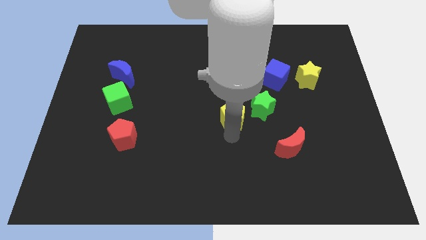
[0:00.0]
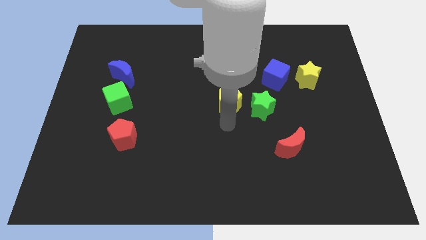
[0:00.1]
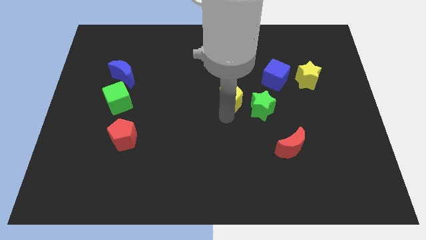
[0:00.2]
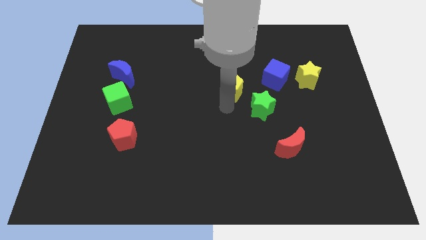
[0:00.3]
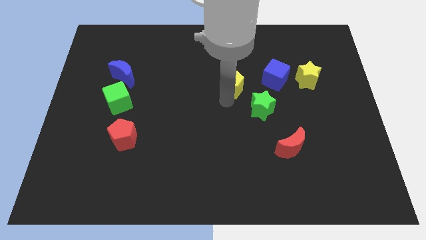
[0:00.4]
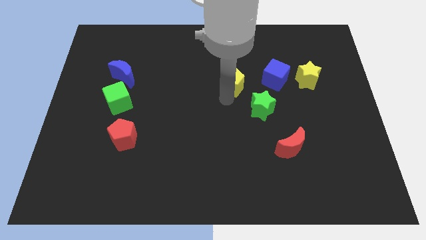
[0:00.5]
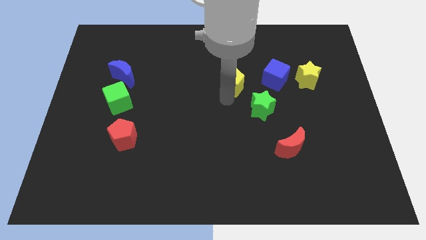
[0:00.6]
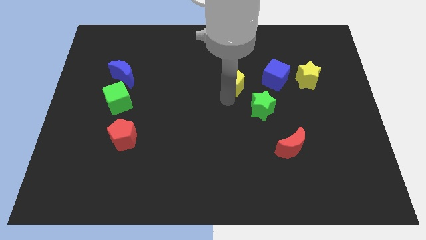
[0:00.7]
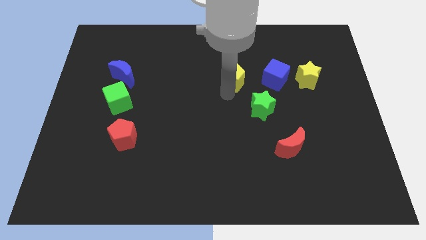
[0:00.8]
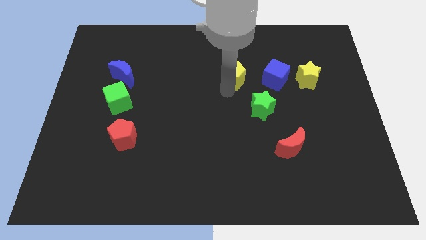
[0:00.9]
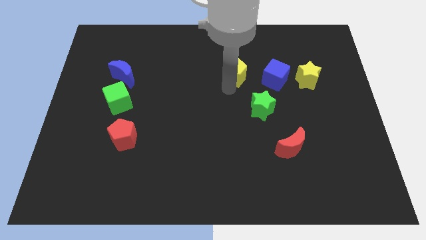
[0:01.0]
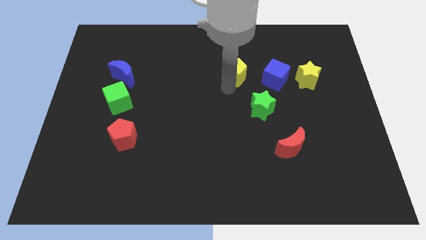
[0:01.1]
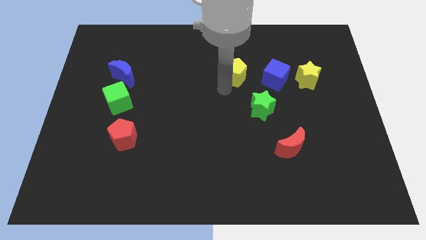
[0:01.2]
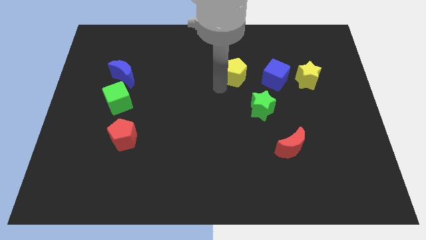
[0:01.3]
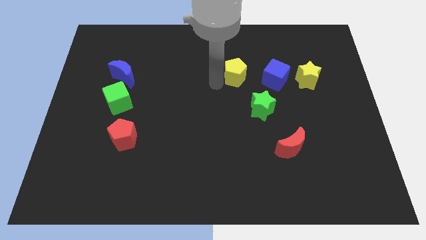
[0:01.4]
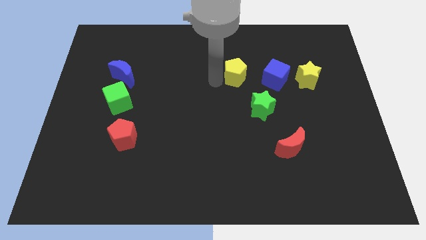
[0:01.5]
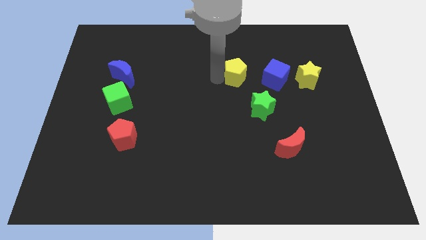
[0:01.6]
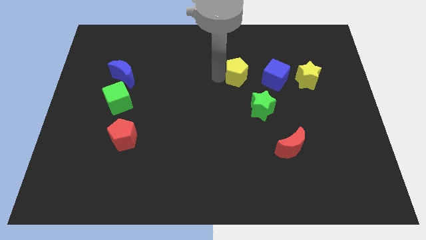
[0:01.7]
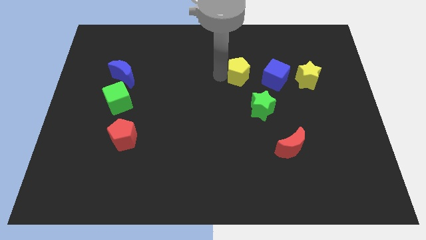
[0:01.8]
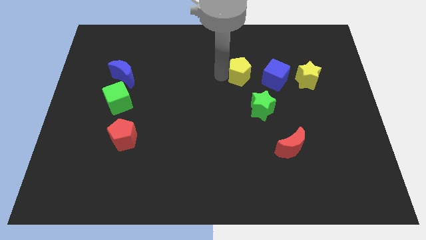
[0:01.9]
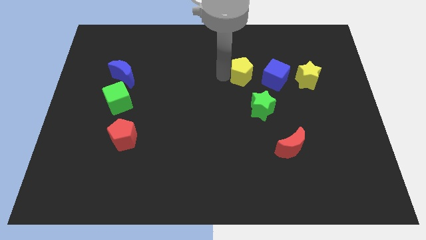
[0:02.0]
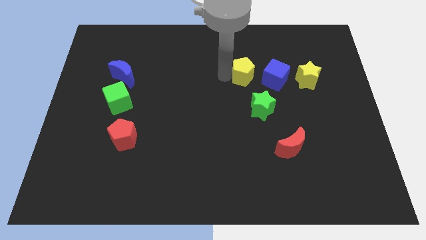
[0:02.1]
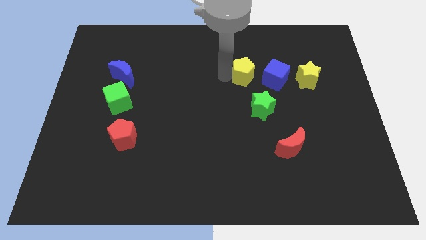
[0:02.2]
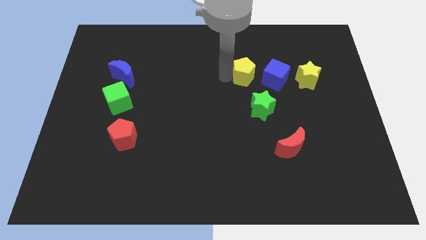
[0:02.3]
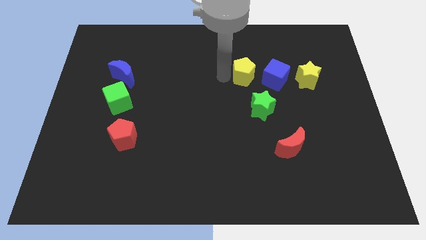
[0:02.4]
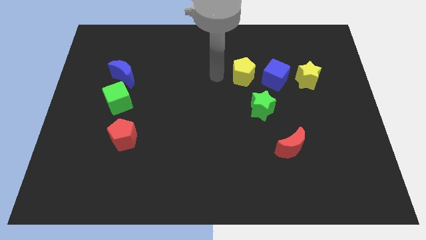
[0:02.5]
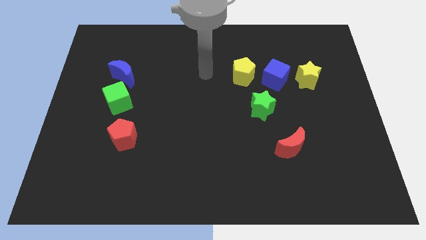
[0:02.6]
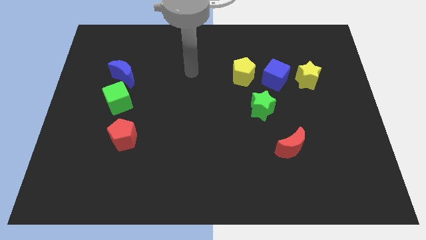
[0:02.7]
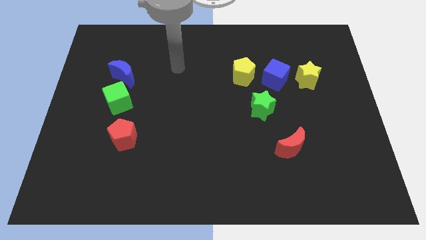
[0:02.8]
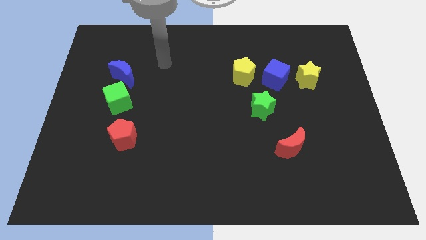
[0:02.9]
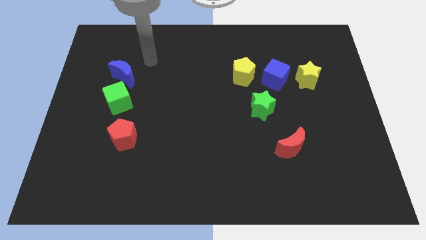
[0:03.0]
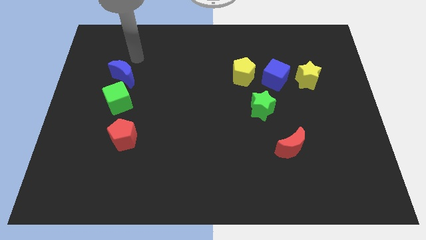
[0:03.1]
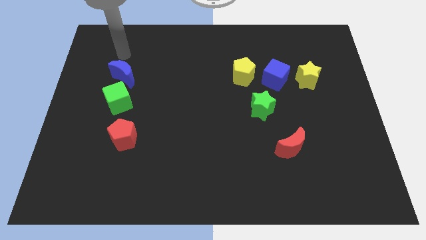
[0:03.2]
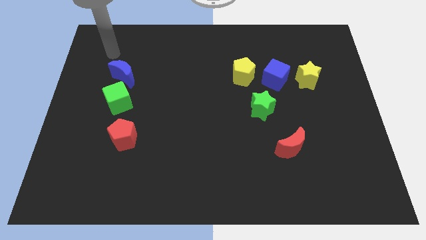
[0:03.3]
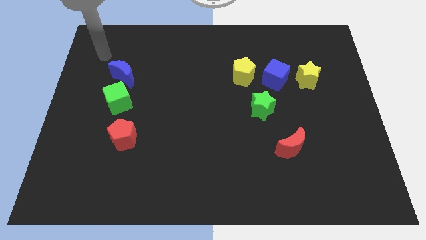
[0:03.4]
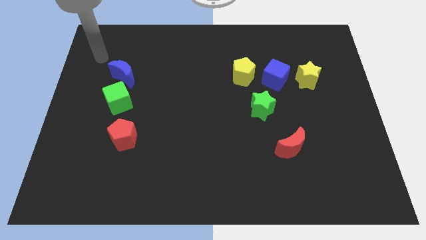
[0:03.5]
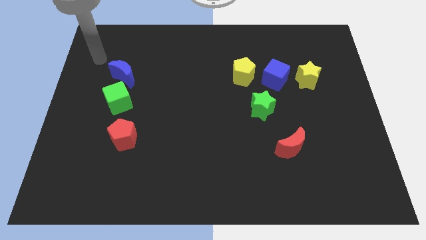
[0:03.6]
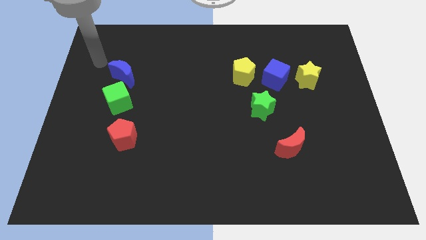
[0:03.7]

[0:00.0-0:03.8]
move the yellow pentagon to the left of the blue cube

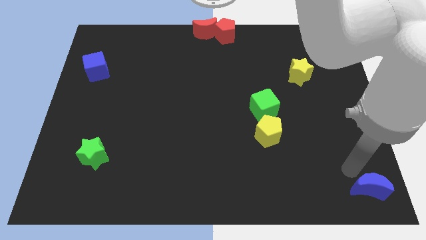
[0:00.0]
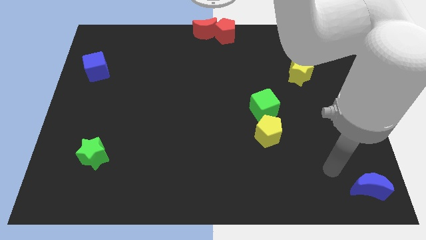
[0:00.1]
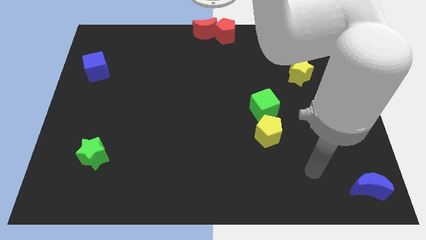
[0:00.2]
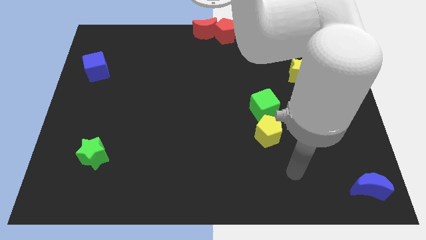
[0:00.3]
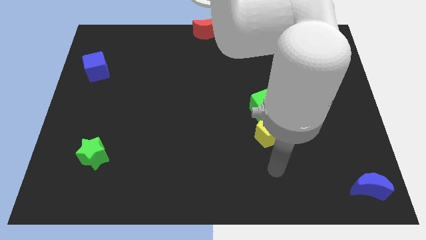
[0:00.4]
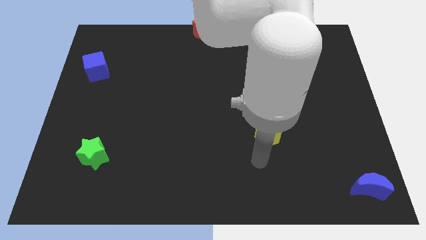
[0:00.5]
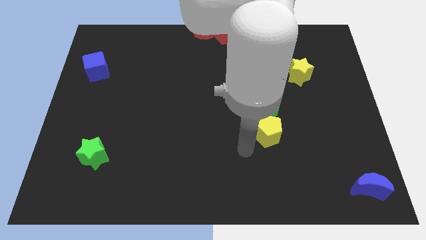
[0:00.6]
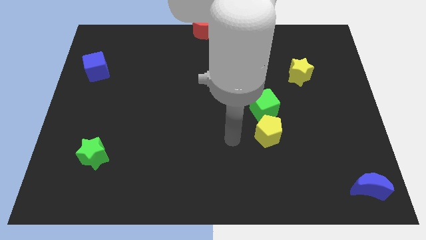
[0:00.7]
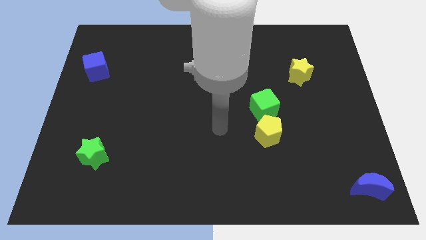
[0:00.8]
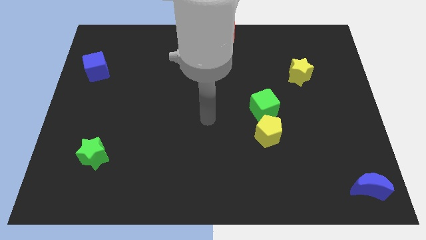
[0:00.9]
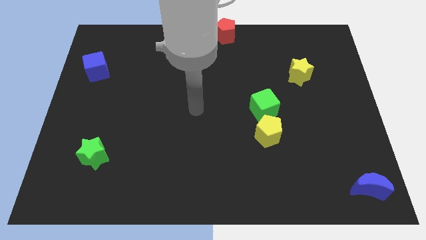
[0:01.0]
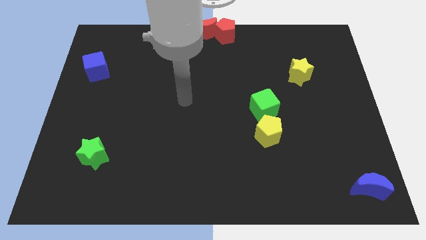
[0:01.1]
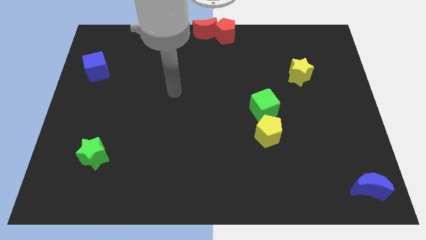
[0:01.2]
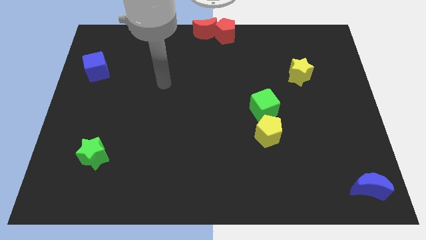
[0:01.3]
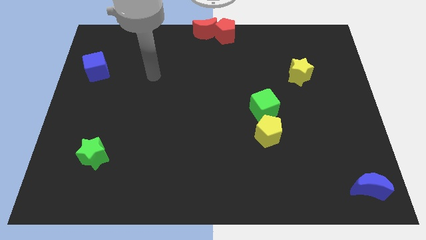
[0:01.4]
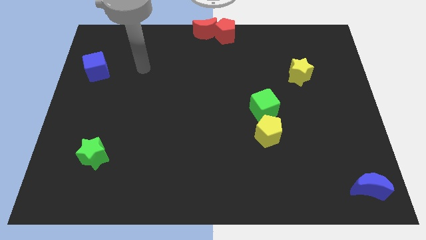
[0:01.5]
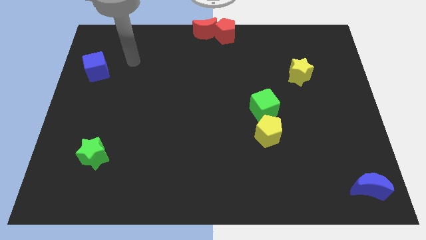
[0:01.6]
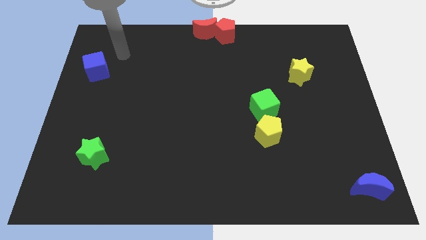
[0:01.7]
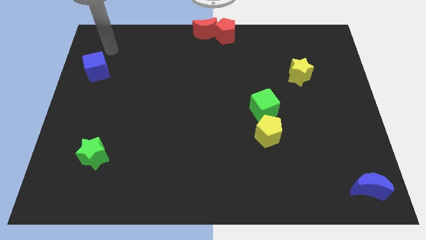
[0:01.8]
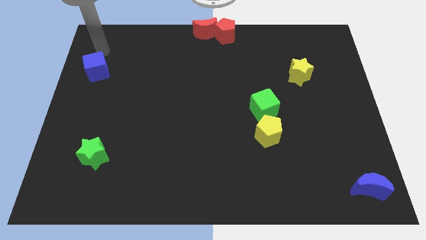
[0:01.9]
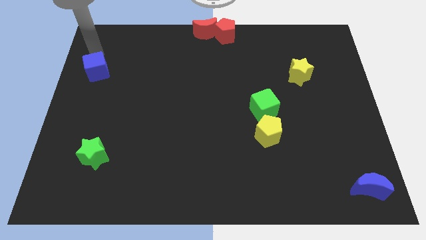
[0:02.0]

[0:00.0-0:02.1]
move the arm away from the blue cube

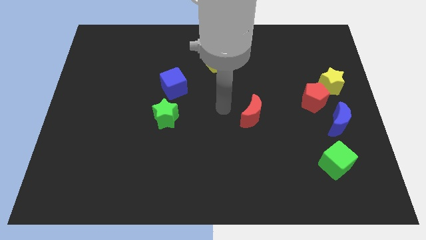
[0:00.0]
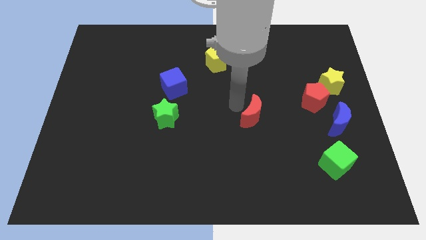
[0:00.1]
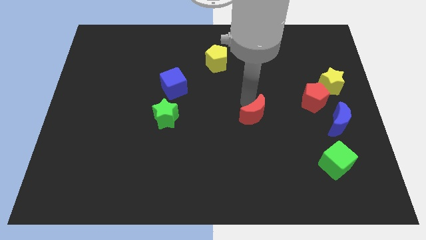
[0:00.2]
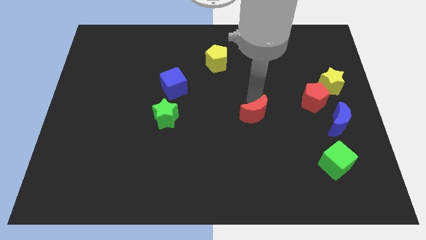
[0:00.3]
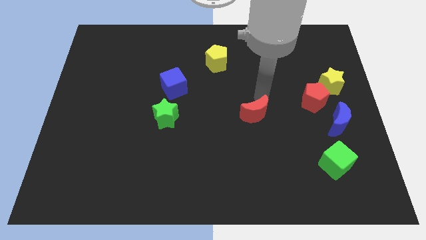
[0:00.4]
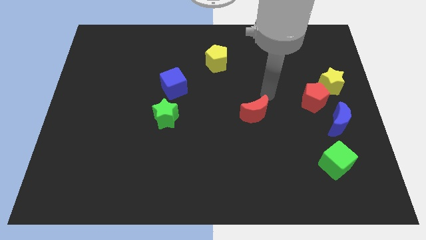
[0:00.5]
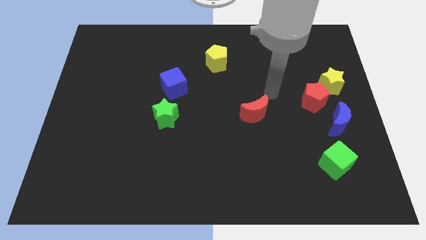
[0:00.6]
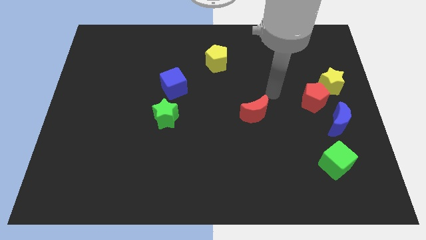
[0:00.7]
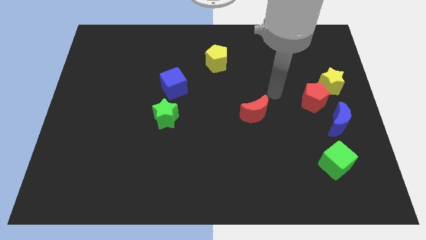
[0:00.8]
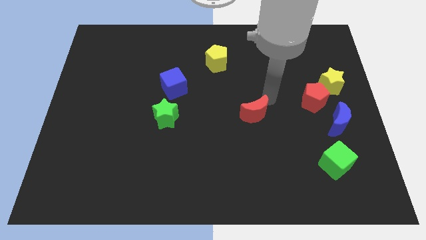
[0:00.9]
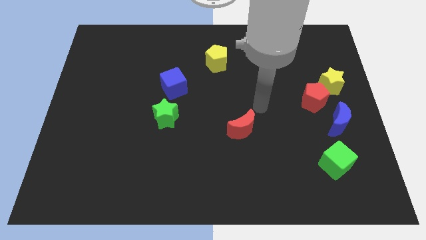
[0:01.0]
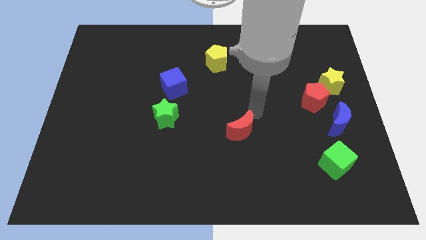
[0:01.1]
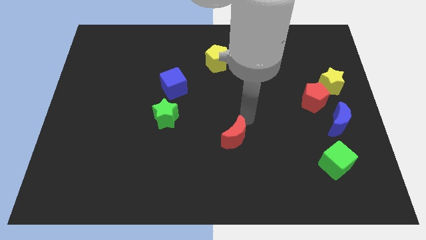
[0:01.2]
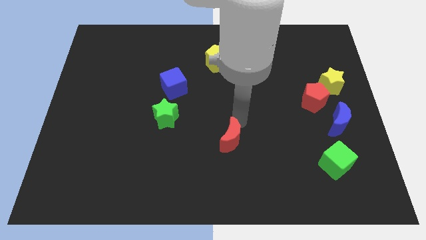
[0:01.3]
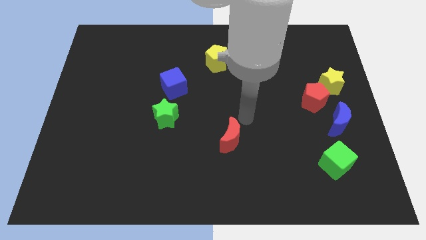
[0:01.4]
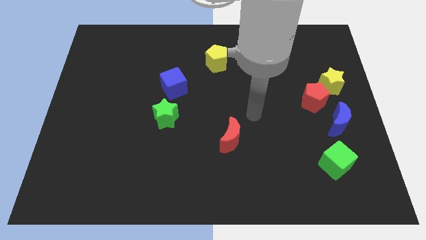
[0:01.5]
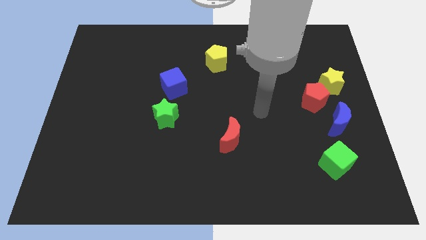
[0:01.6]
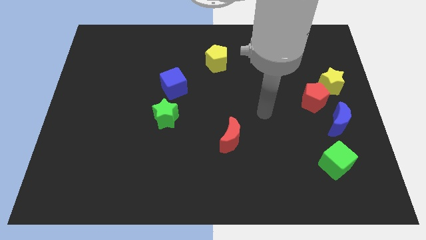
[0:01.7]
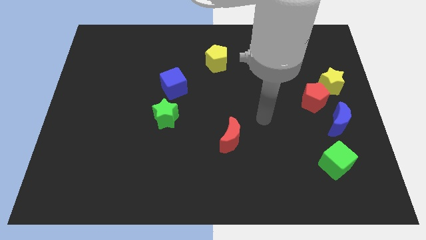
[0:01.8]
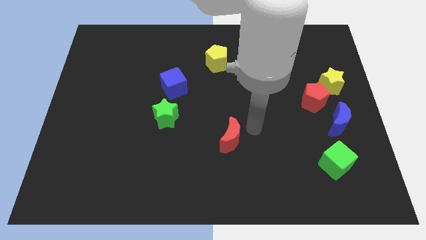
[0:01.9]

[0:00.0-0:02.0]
push the red crescent in between the green star and the green cube

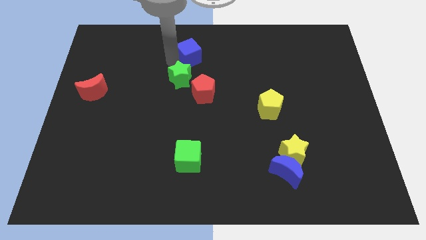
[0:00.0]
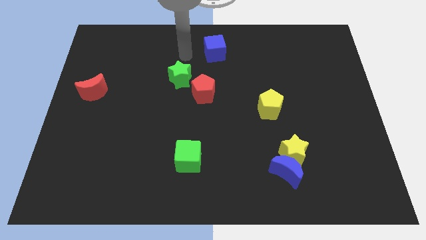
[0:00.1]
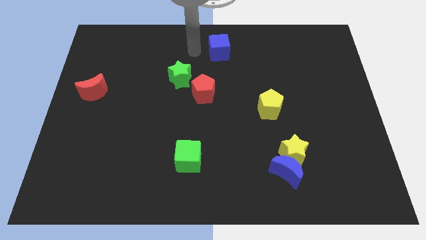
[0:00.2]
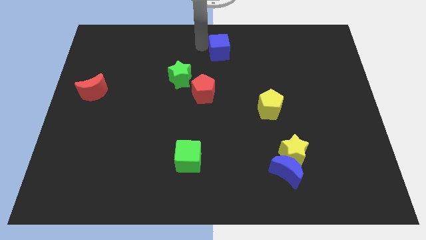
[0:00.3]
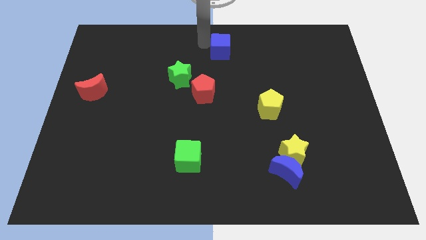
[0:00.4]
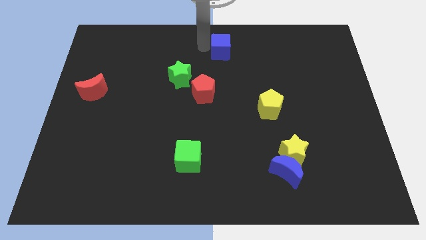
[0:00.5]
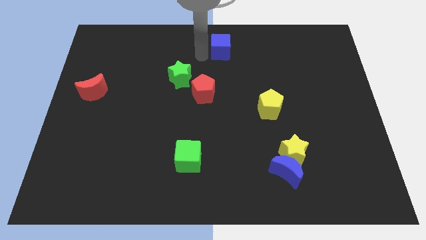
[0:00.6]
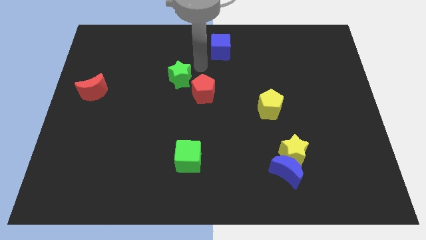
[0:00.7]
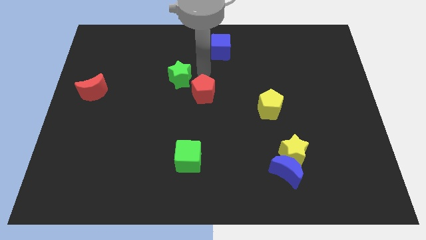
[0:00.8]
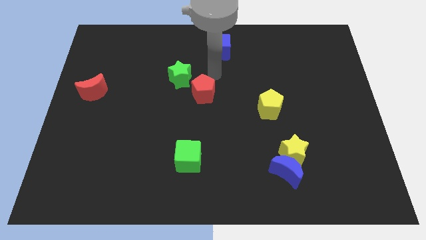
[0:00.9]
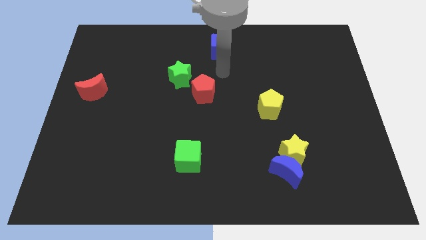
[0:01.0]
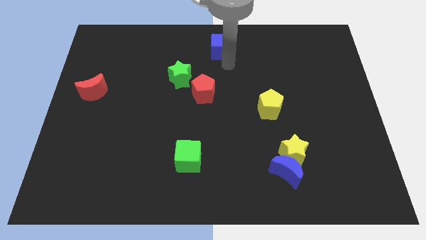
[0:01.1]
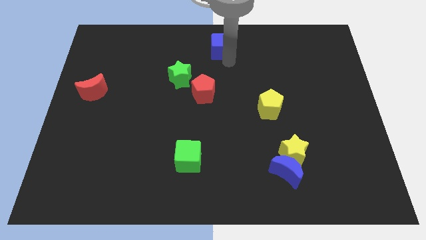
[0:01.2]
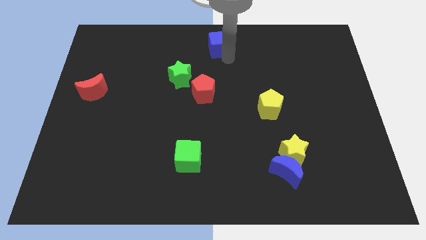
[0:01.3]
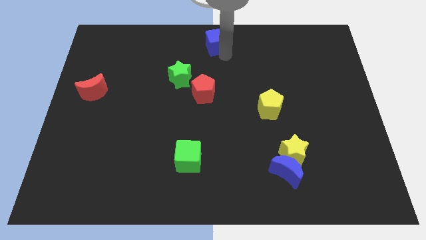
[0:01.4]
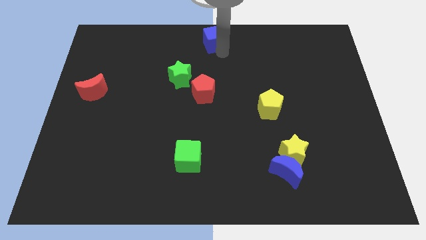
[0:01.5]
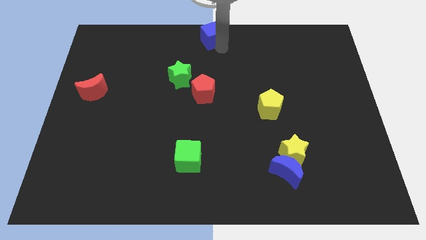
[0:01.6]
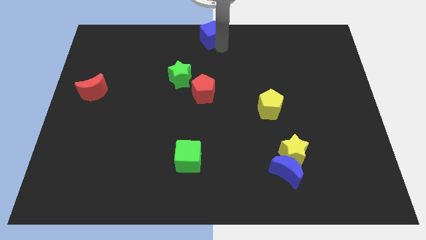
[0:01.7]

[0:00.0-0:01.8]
place blue cube to the top center of the board
